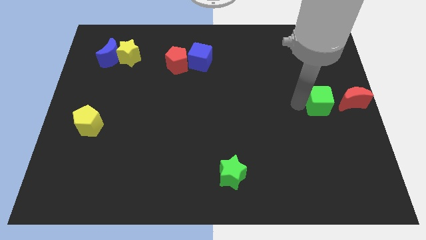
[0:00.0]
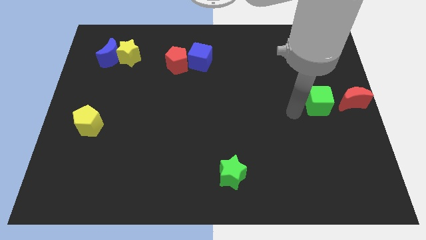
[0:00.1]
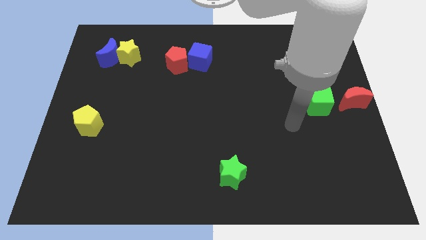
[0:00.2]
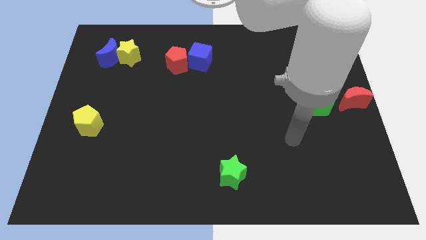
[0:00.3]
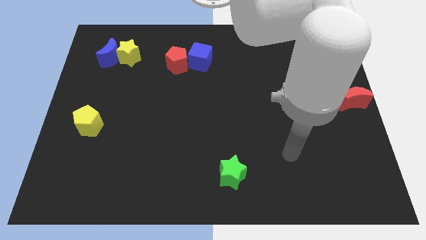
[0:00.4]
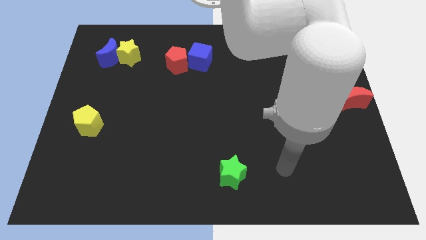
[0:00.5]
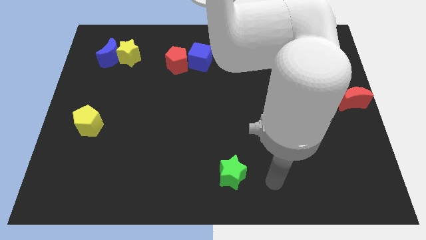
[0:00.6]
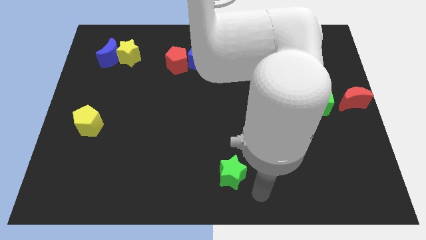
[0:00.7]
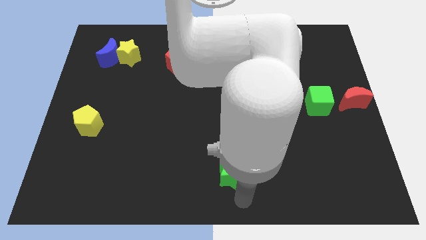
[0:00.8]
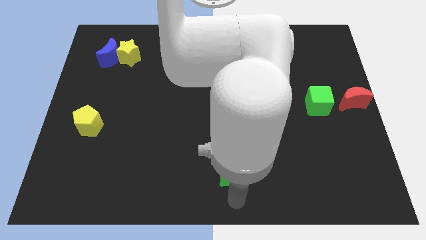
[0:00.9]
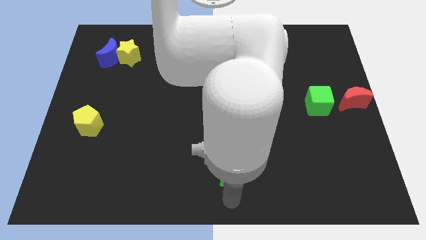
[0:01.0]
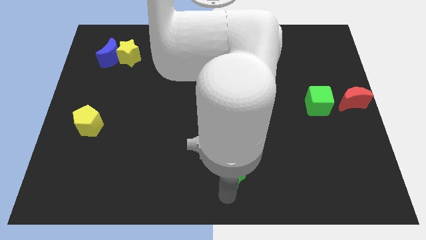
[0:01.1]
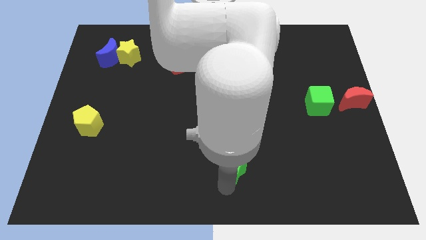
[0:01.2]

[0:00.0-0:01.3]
move your arm towards green star

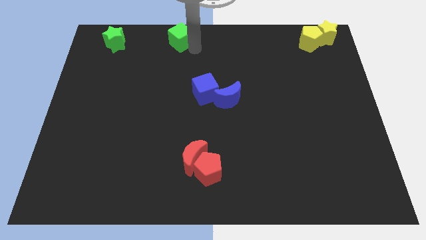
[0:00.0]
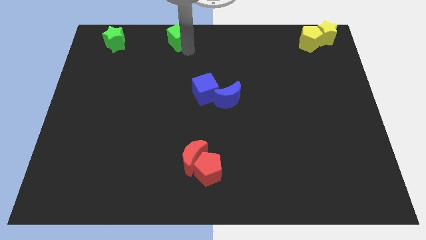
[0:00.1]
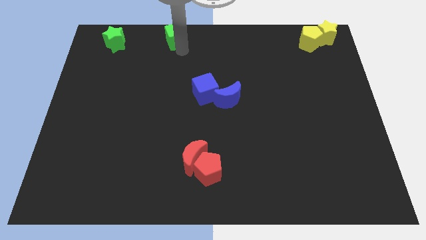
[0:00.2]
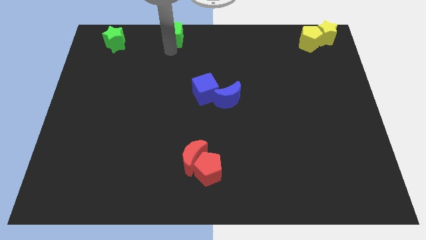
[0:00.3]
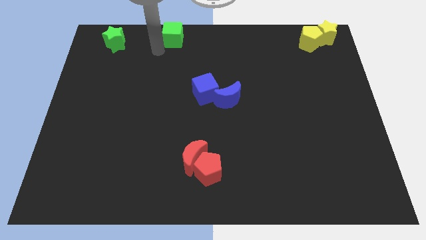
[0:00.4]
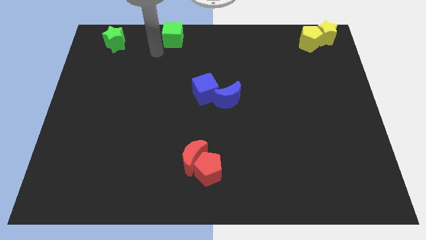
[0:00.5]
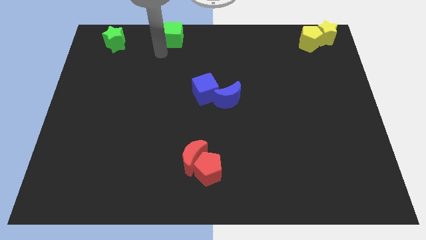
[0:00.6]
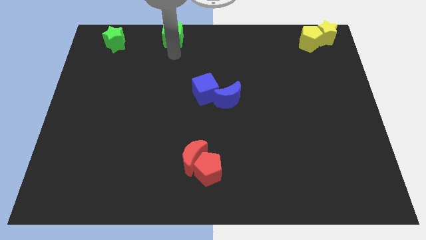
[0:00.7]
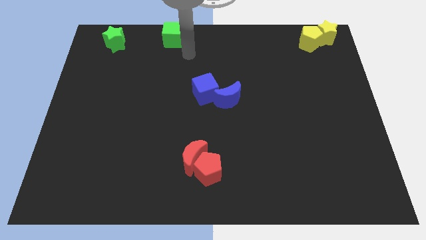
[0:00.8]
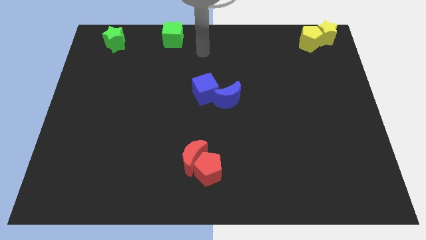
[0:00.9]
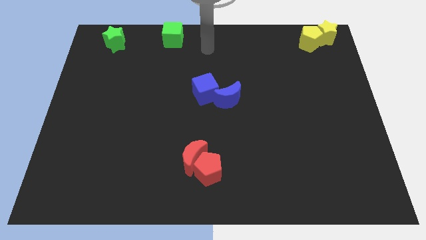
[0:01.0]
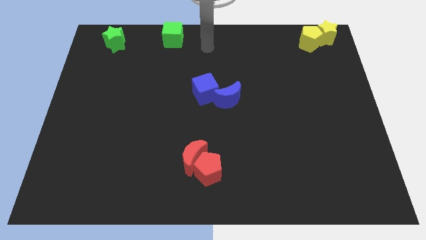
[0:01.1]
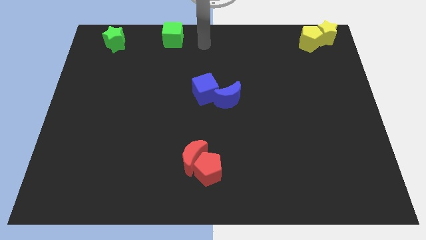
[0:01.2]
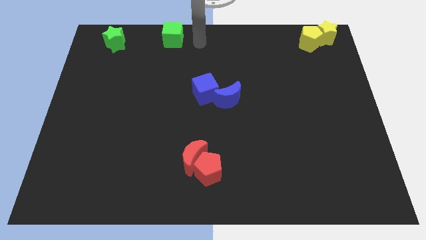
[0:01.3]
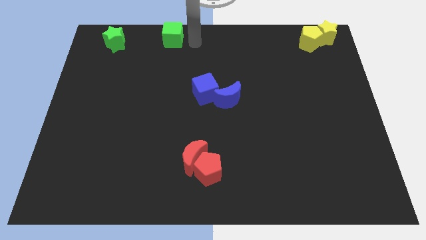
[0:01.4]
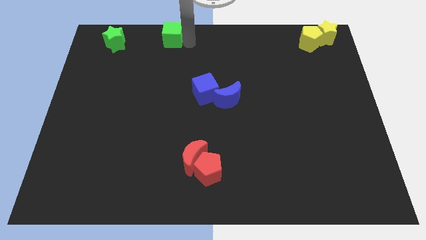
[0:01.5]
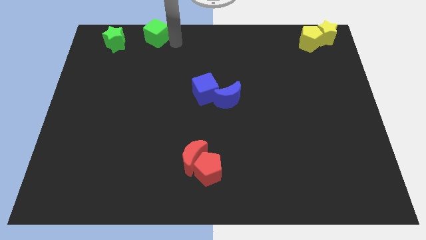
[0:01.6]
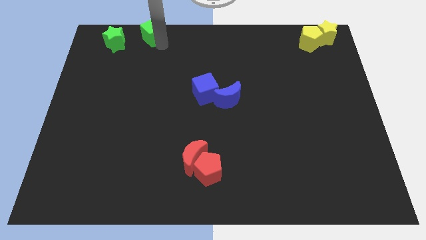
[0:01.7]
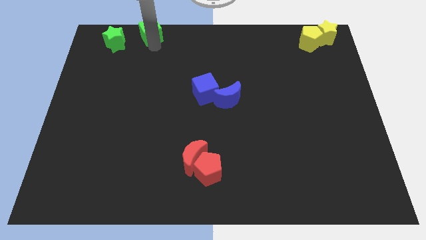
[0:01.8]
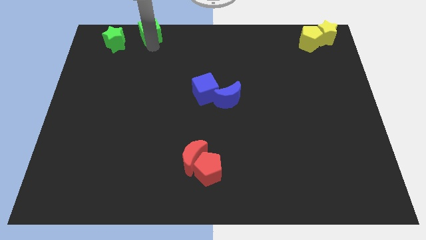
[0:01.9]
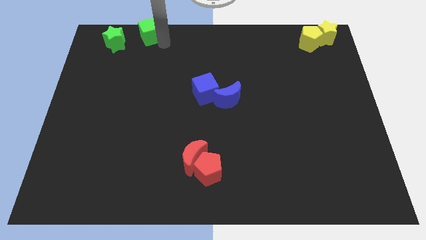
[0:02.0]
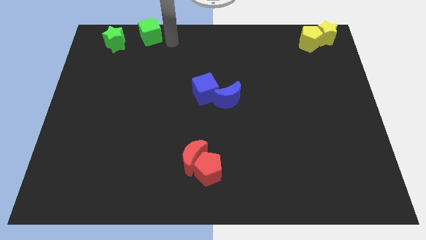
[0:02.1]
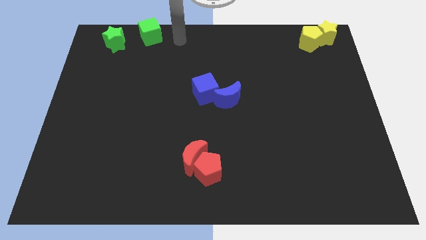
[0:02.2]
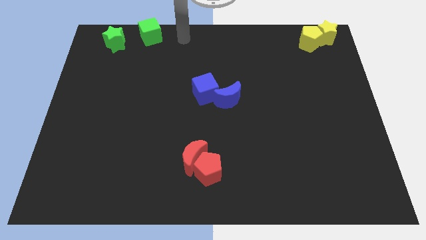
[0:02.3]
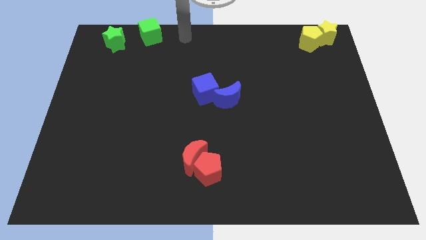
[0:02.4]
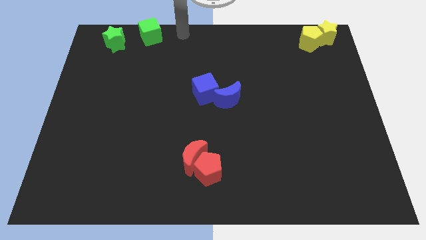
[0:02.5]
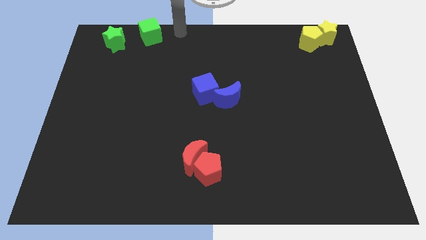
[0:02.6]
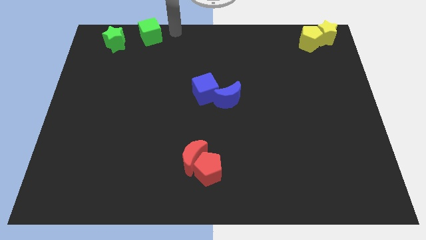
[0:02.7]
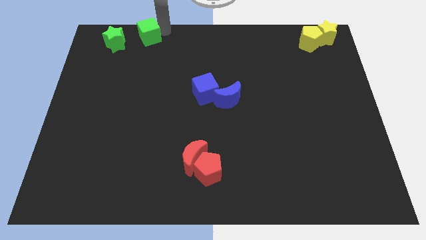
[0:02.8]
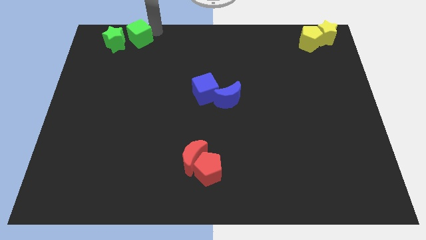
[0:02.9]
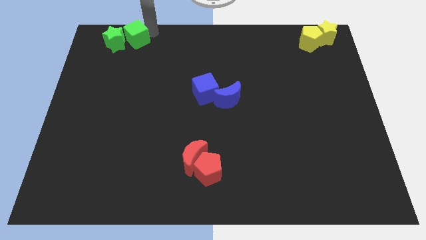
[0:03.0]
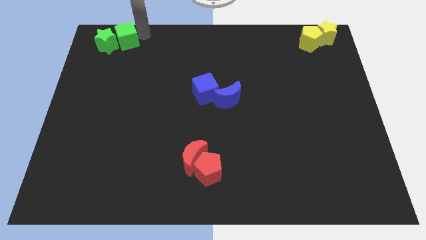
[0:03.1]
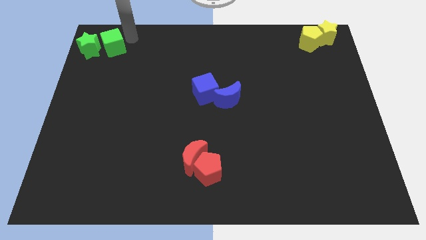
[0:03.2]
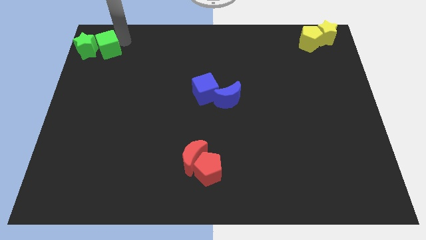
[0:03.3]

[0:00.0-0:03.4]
move green cube towards green star

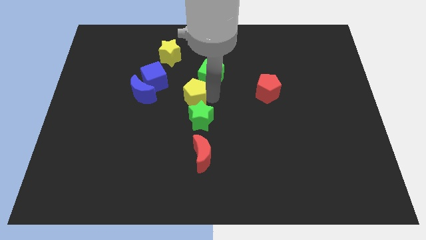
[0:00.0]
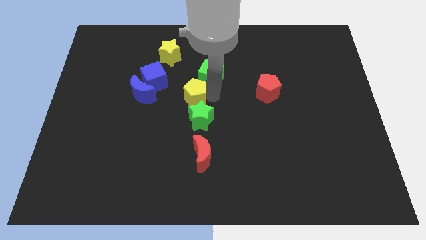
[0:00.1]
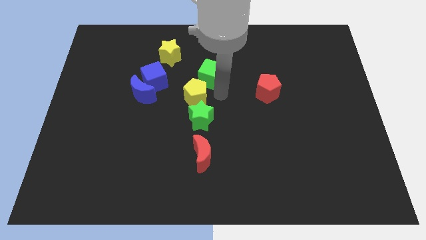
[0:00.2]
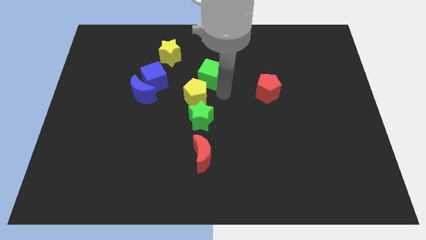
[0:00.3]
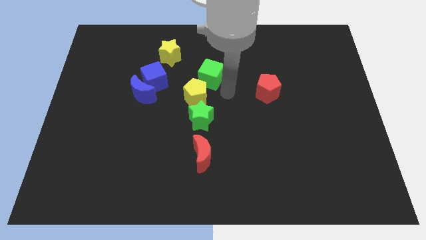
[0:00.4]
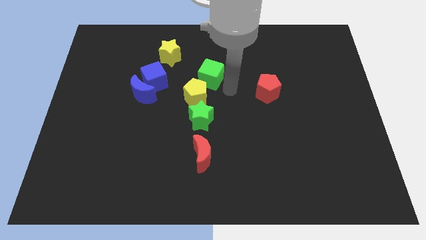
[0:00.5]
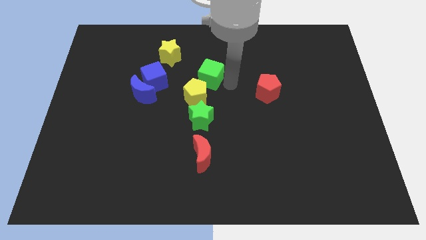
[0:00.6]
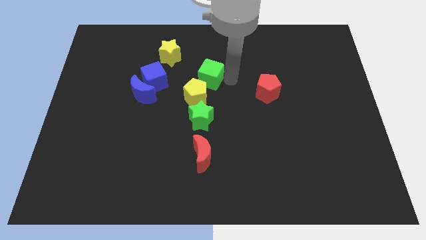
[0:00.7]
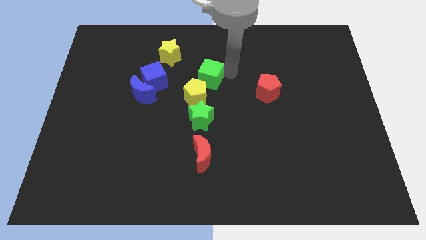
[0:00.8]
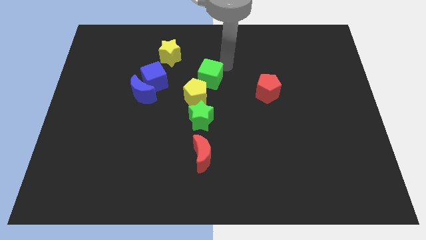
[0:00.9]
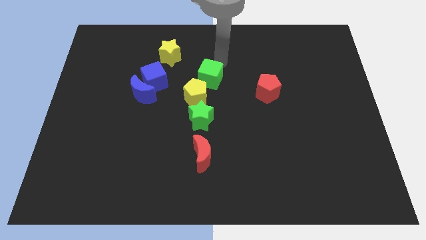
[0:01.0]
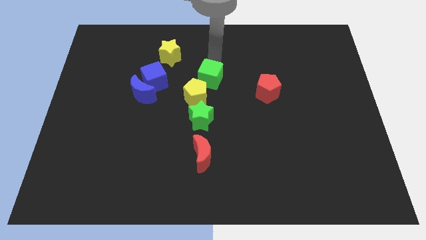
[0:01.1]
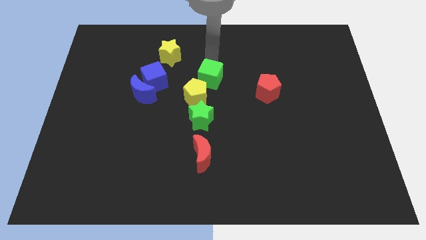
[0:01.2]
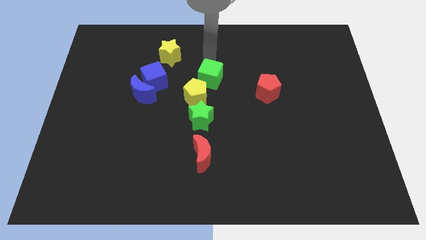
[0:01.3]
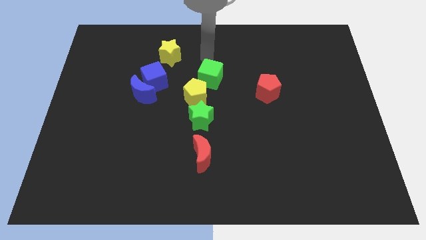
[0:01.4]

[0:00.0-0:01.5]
point your arm to the top the green cube

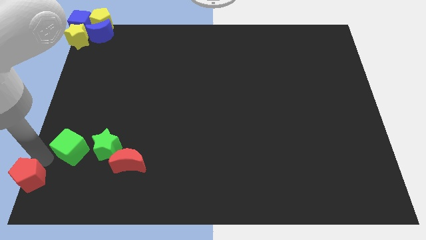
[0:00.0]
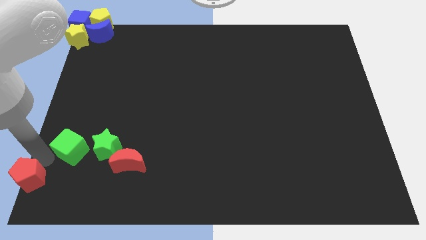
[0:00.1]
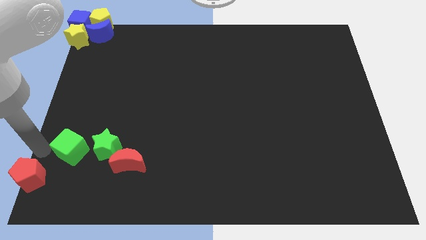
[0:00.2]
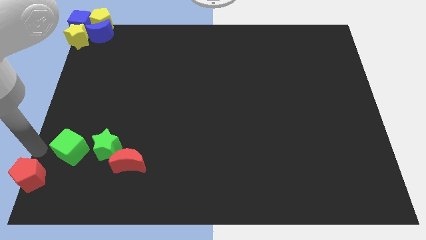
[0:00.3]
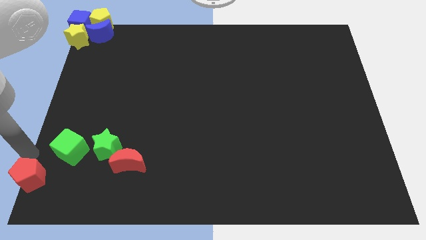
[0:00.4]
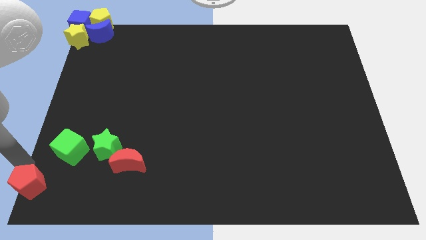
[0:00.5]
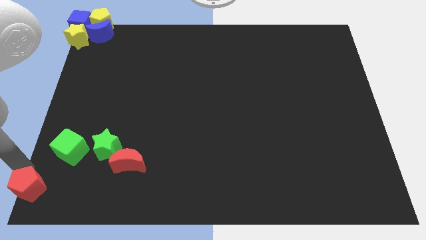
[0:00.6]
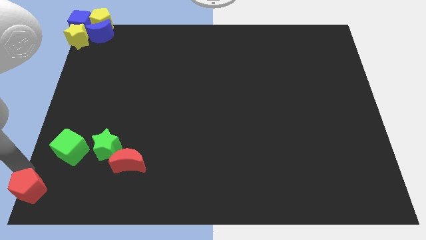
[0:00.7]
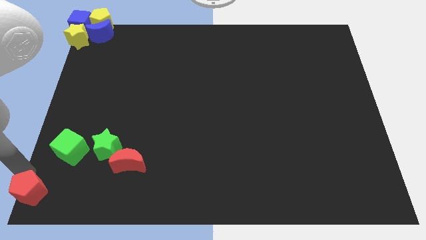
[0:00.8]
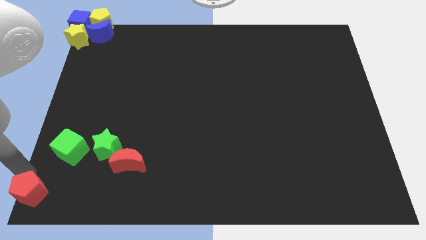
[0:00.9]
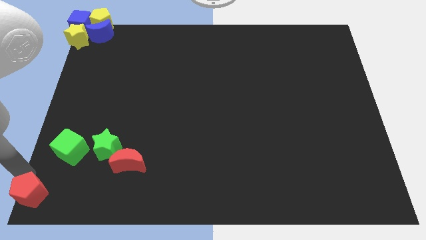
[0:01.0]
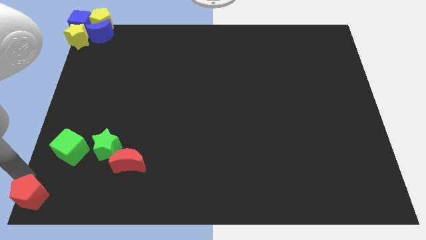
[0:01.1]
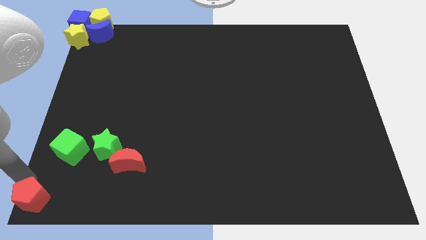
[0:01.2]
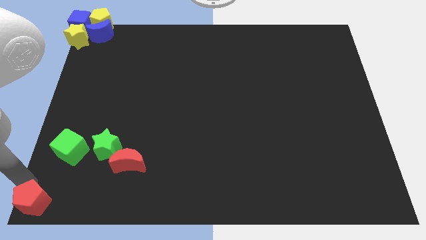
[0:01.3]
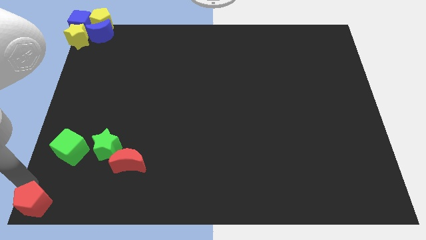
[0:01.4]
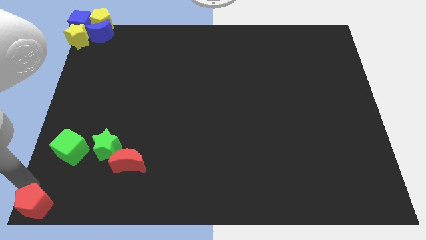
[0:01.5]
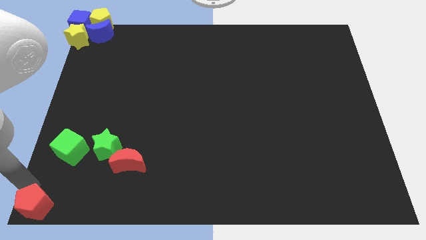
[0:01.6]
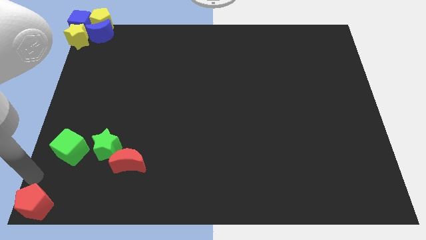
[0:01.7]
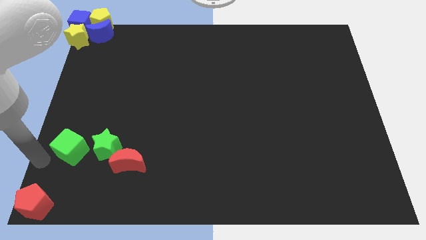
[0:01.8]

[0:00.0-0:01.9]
push the red pentagon to the bottom left corner of the board

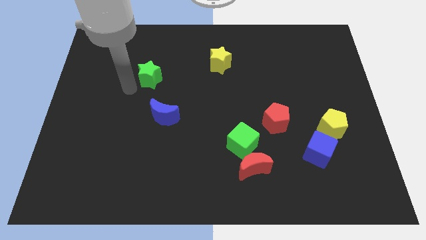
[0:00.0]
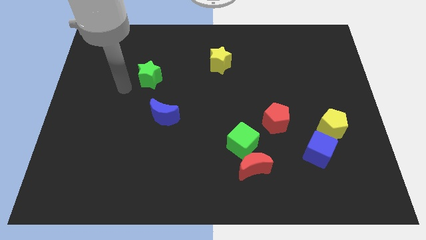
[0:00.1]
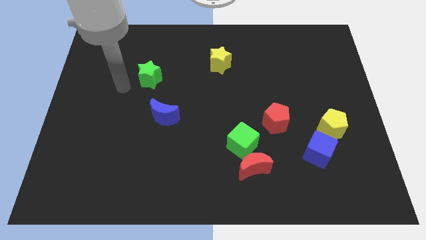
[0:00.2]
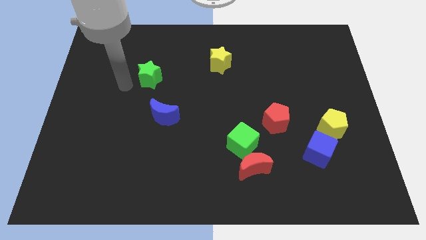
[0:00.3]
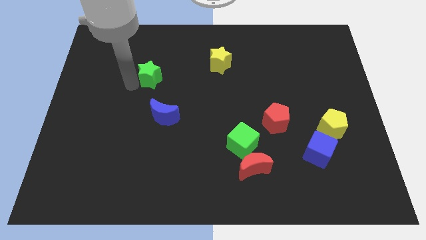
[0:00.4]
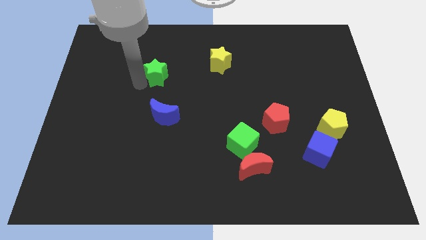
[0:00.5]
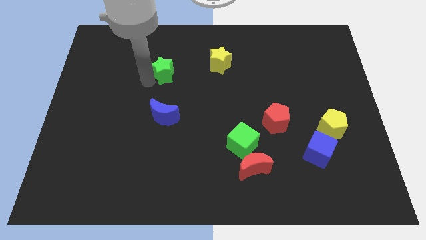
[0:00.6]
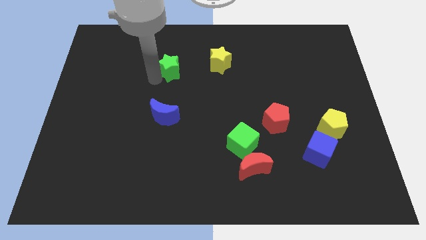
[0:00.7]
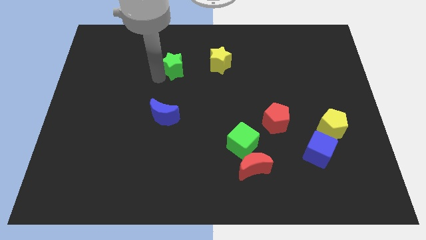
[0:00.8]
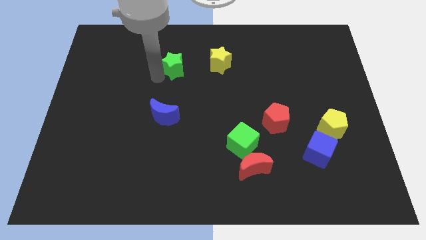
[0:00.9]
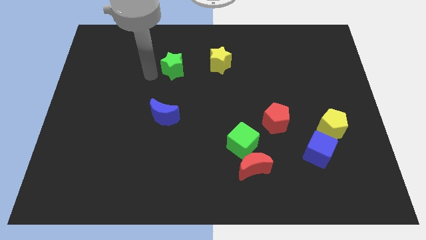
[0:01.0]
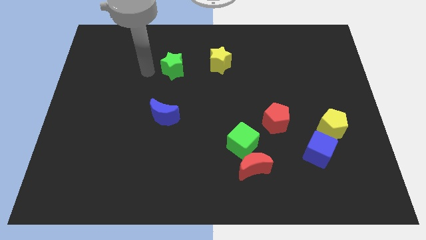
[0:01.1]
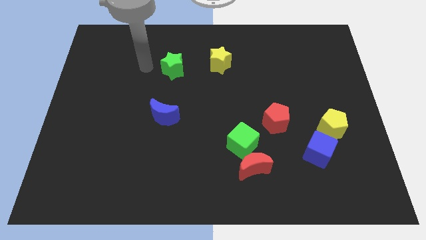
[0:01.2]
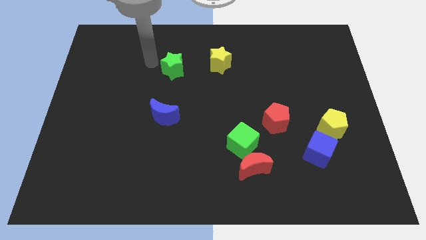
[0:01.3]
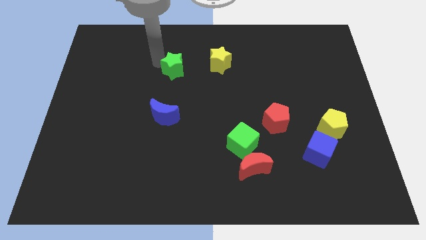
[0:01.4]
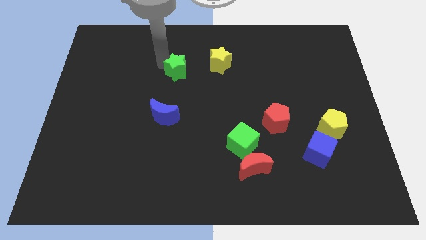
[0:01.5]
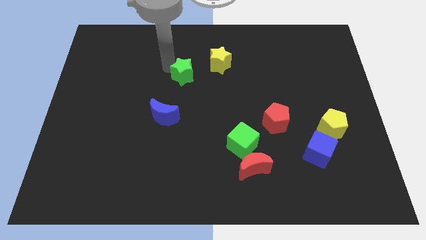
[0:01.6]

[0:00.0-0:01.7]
push the green star towards the yellow star
